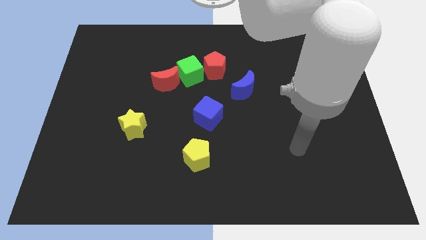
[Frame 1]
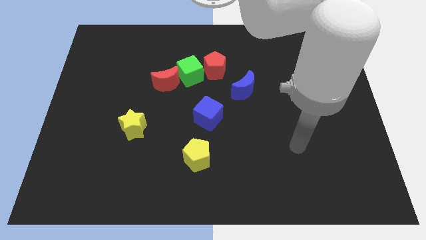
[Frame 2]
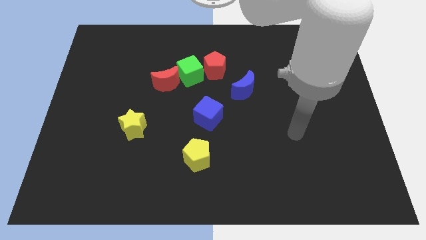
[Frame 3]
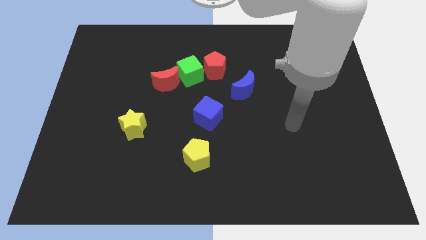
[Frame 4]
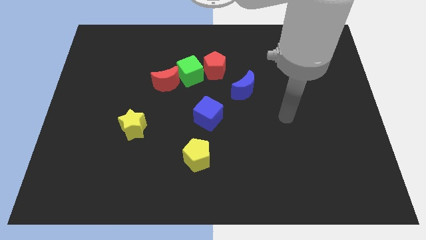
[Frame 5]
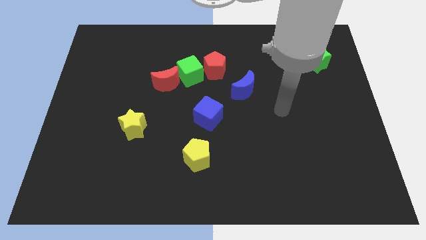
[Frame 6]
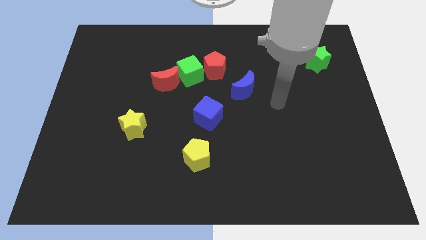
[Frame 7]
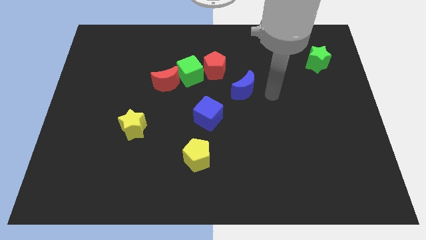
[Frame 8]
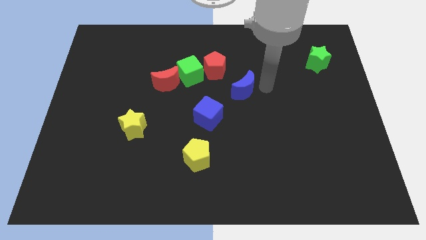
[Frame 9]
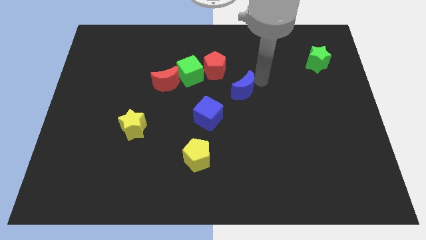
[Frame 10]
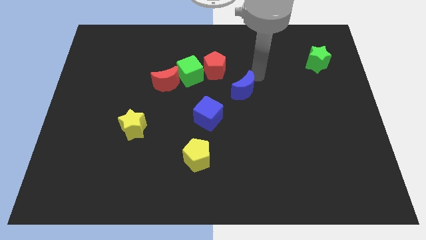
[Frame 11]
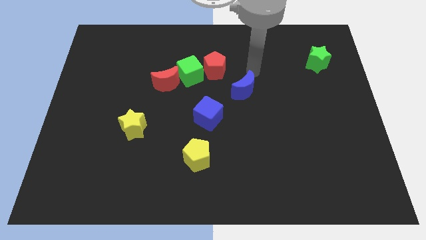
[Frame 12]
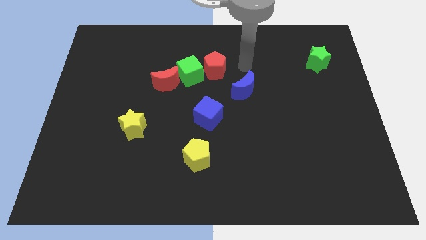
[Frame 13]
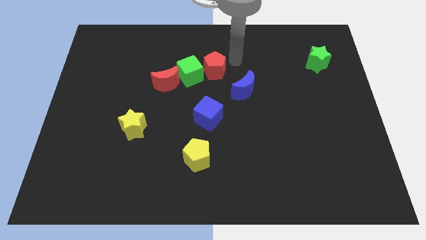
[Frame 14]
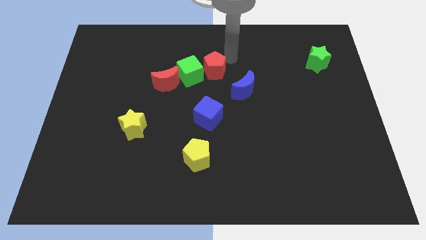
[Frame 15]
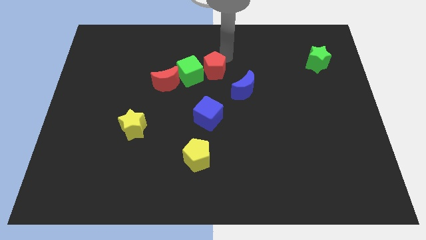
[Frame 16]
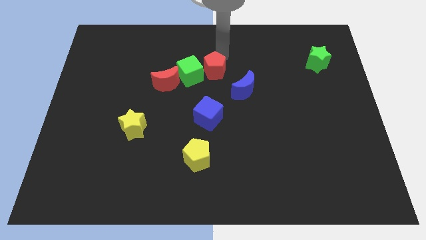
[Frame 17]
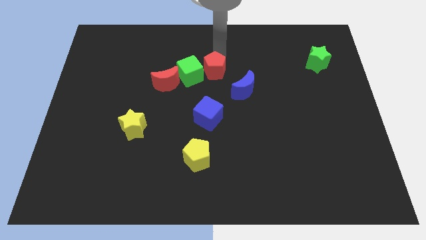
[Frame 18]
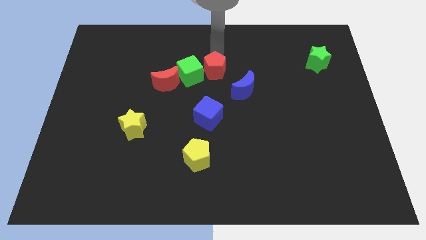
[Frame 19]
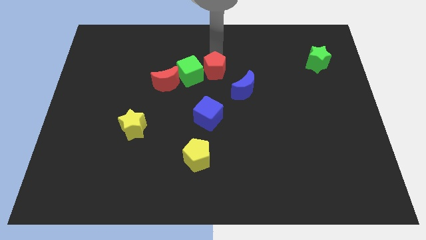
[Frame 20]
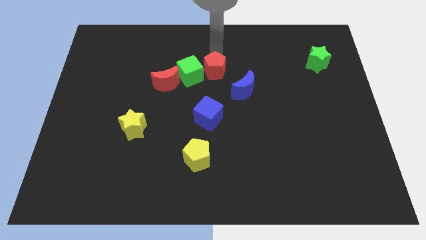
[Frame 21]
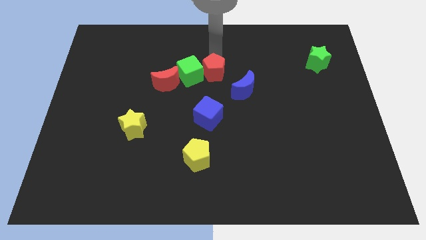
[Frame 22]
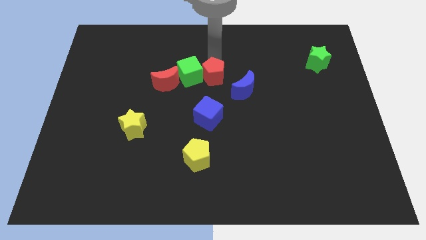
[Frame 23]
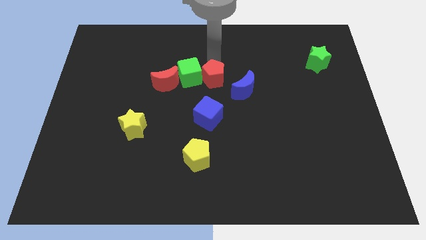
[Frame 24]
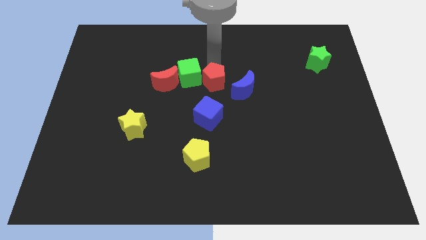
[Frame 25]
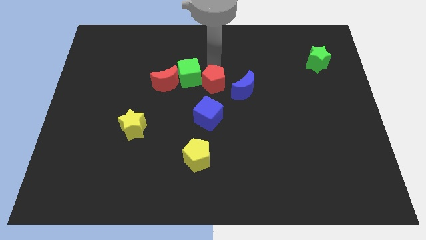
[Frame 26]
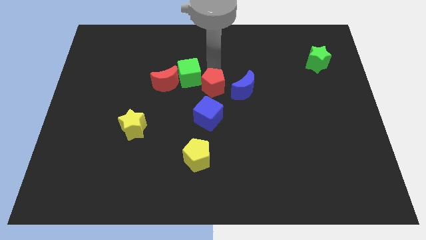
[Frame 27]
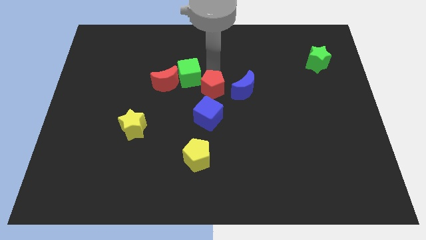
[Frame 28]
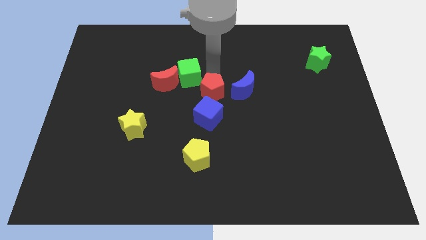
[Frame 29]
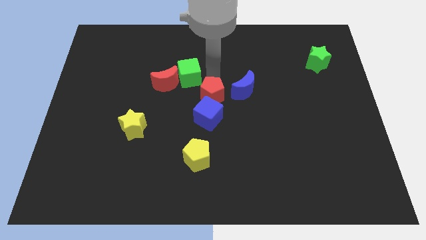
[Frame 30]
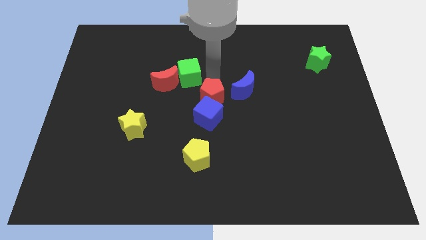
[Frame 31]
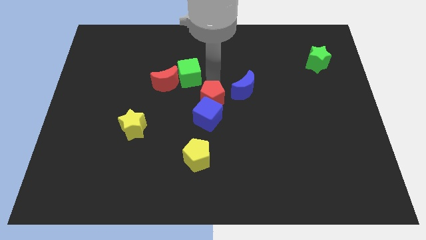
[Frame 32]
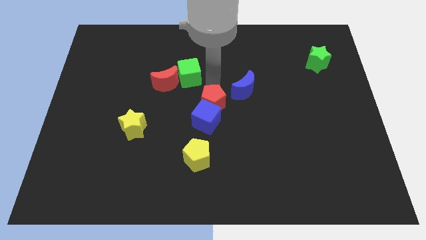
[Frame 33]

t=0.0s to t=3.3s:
put the red pentagon towards the blue cube

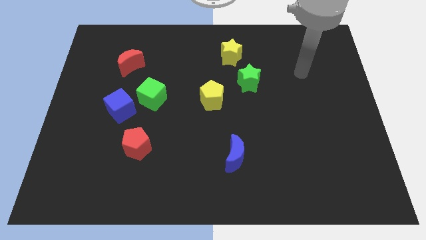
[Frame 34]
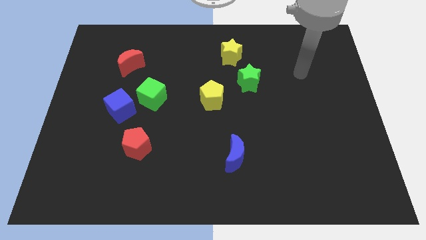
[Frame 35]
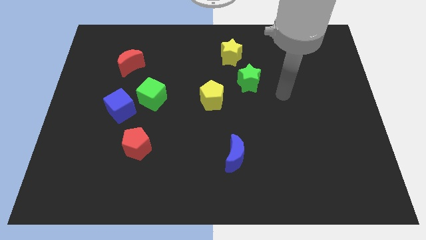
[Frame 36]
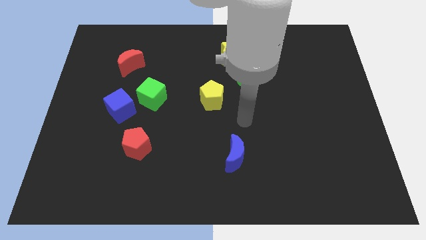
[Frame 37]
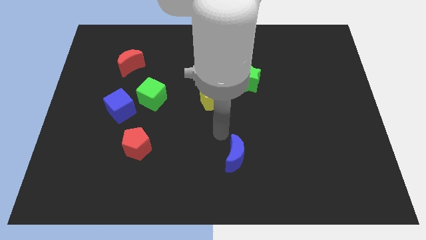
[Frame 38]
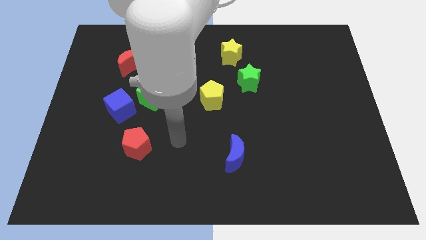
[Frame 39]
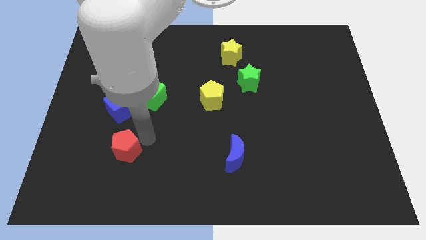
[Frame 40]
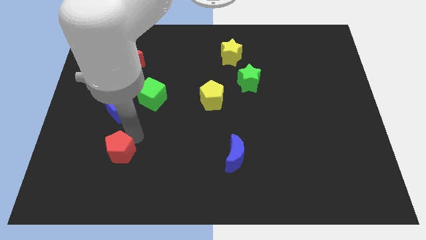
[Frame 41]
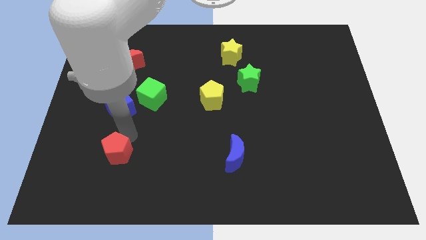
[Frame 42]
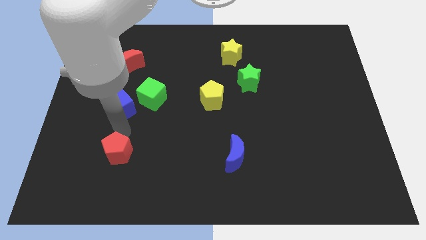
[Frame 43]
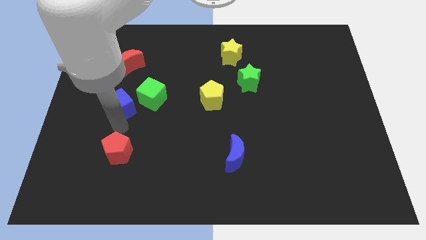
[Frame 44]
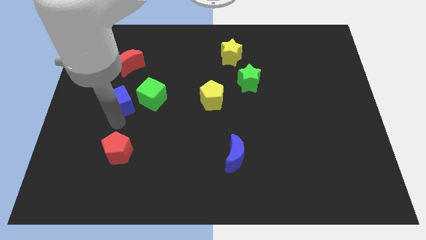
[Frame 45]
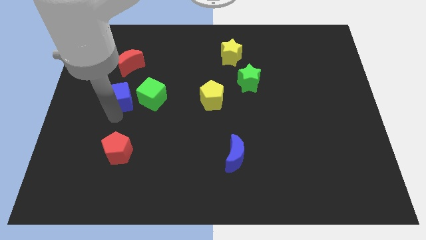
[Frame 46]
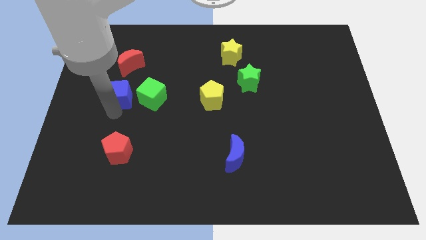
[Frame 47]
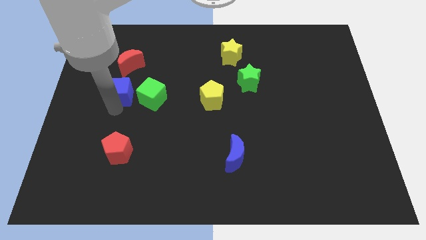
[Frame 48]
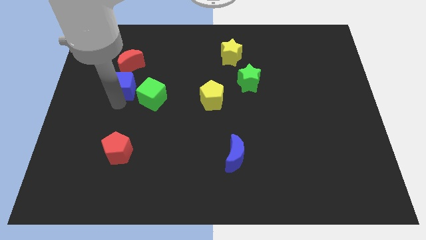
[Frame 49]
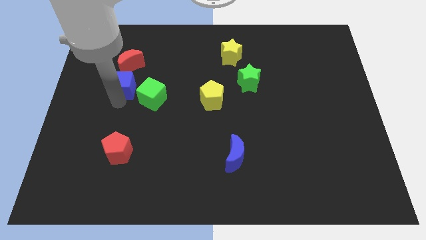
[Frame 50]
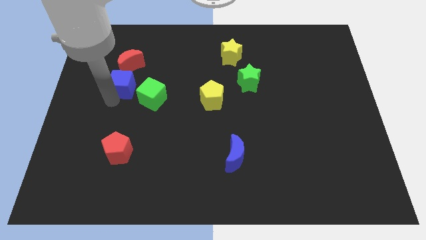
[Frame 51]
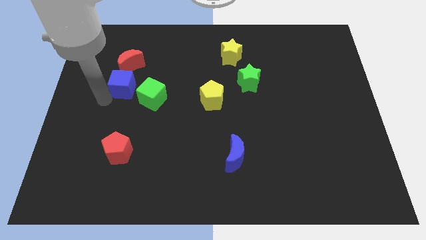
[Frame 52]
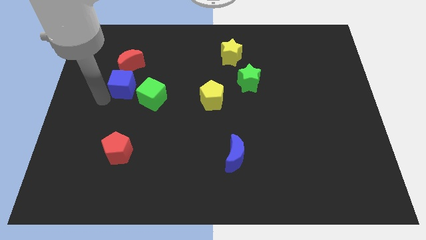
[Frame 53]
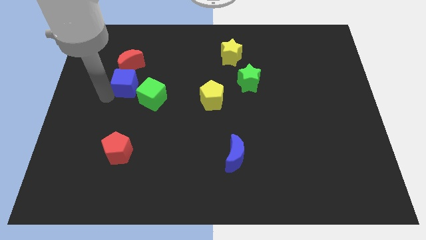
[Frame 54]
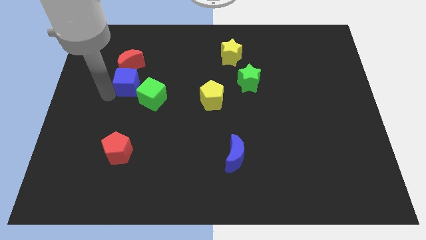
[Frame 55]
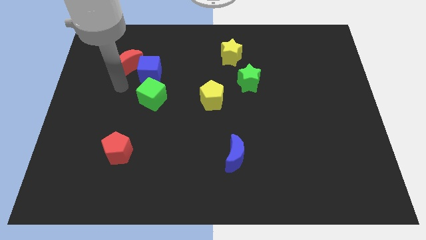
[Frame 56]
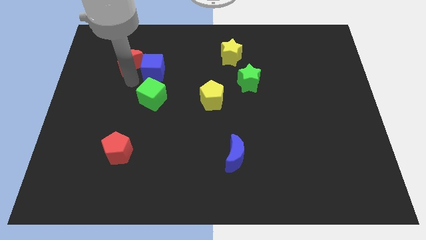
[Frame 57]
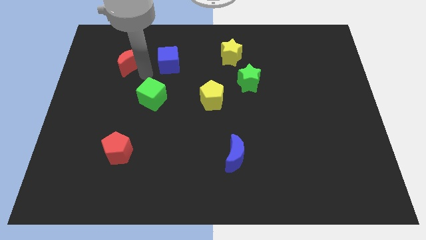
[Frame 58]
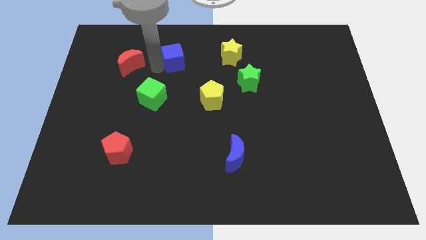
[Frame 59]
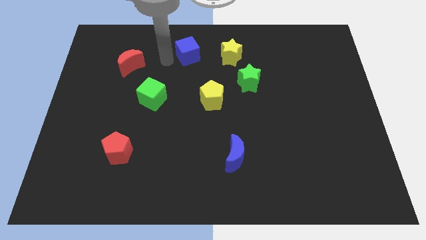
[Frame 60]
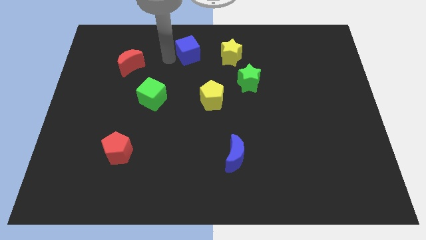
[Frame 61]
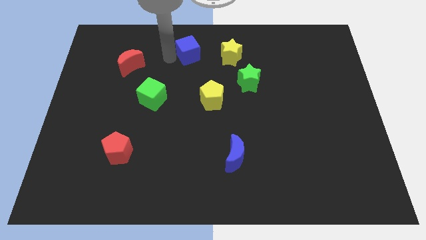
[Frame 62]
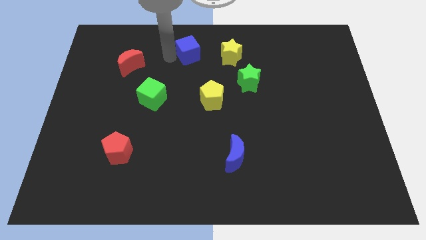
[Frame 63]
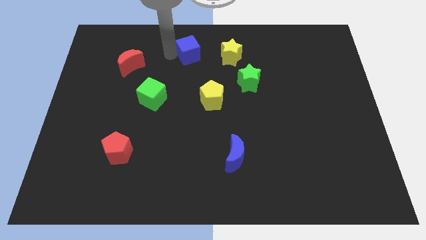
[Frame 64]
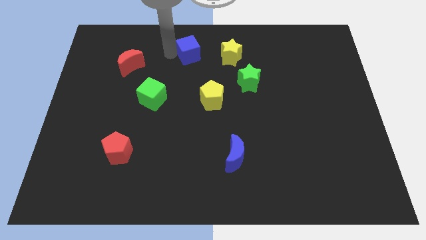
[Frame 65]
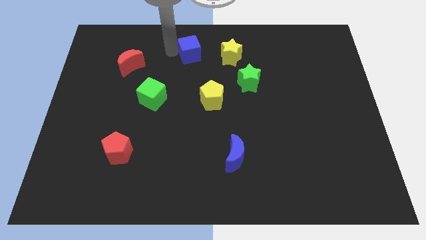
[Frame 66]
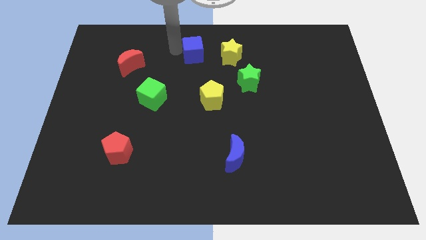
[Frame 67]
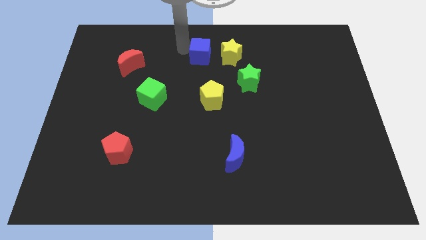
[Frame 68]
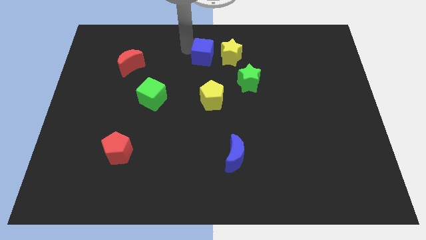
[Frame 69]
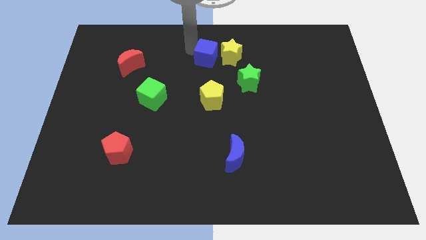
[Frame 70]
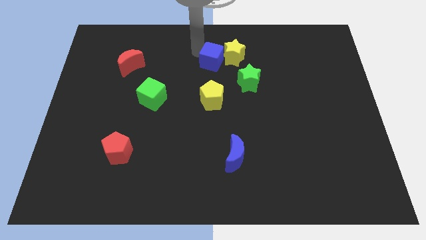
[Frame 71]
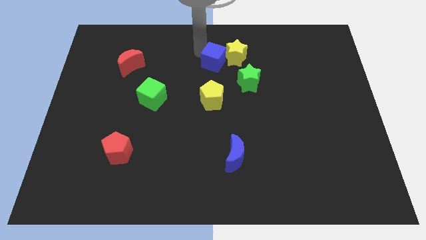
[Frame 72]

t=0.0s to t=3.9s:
put the blue cube to the yellow star

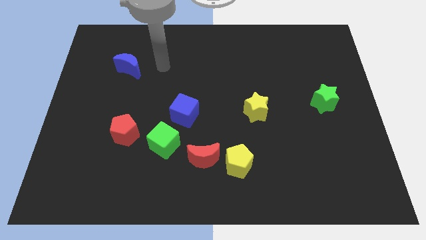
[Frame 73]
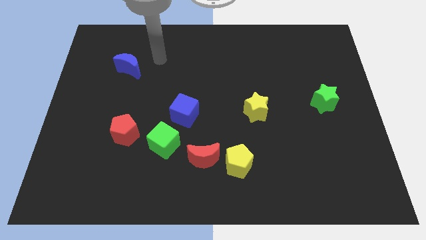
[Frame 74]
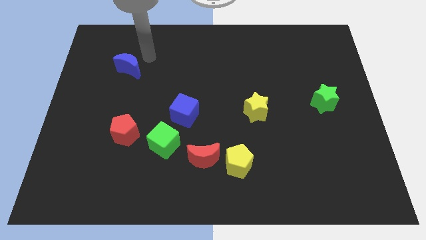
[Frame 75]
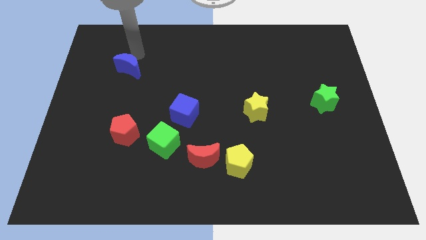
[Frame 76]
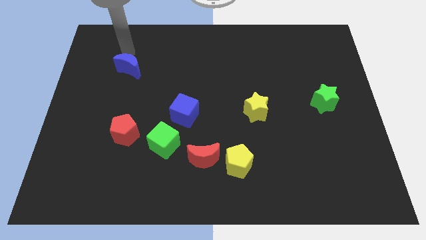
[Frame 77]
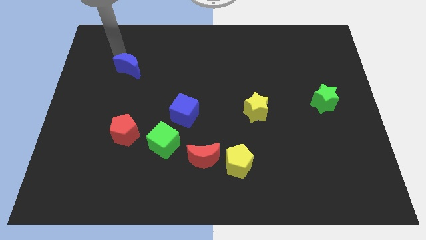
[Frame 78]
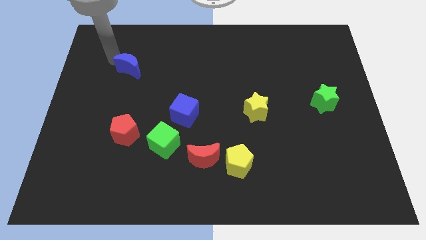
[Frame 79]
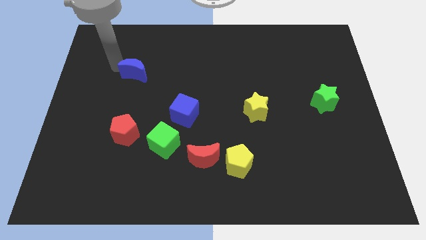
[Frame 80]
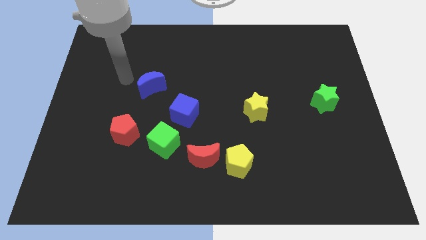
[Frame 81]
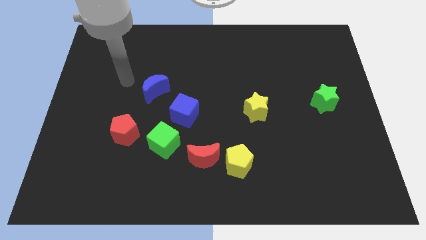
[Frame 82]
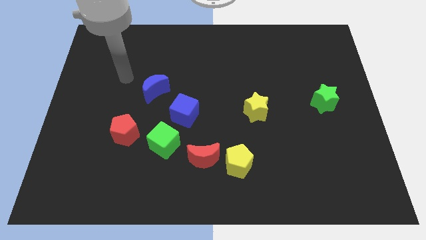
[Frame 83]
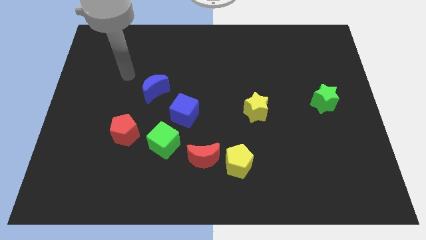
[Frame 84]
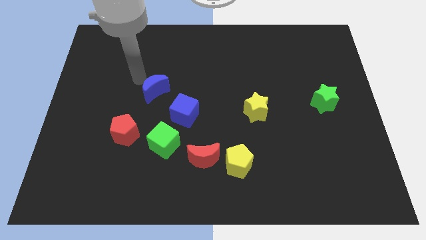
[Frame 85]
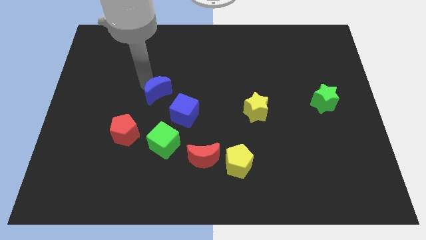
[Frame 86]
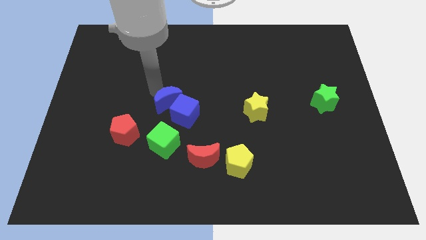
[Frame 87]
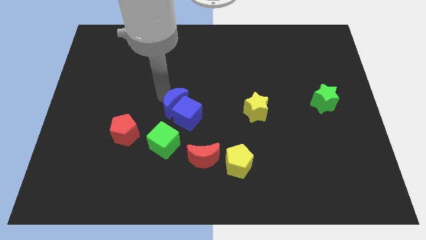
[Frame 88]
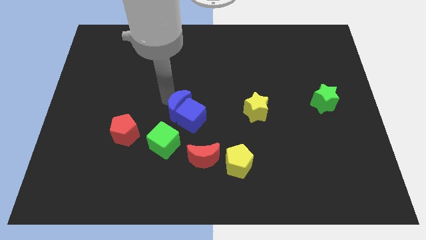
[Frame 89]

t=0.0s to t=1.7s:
slide the blue moon towards the blue cube
